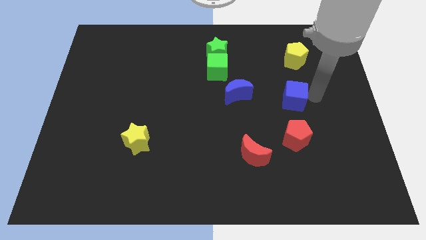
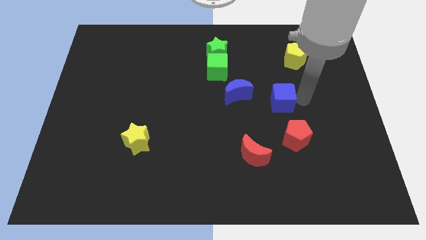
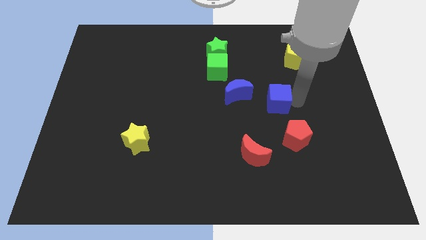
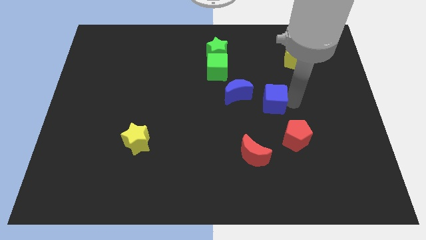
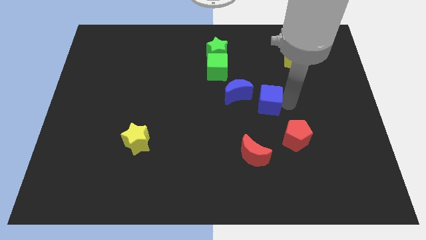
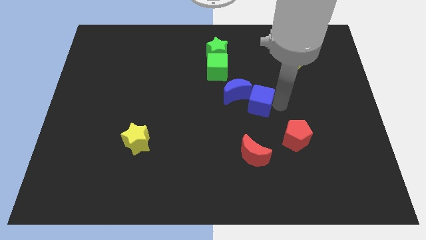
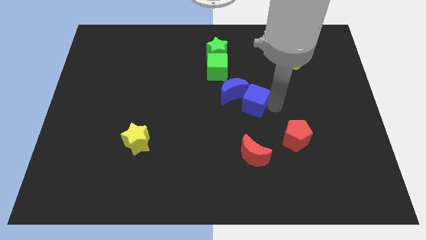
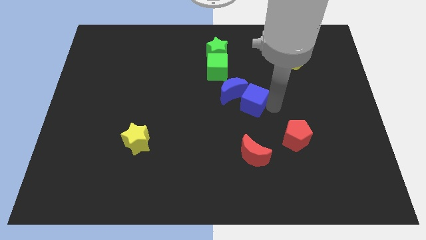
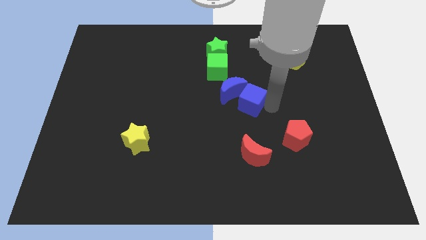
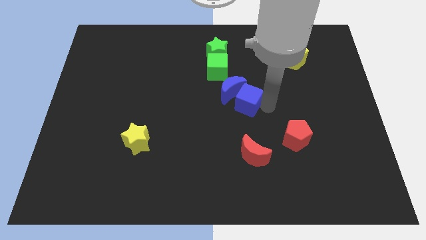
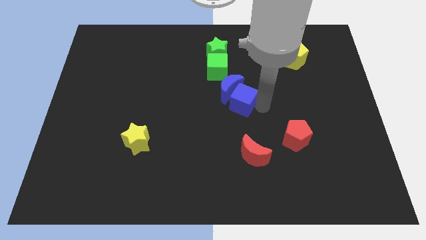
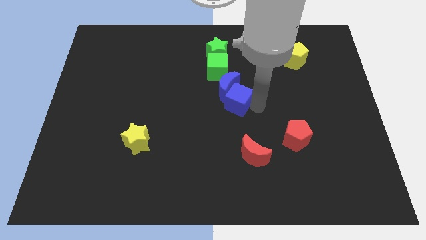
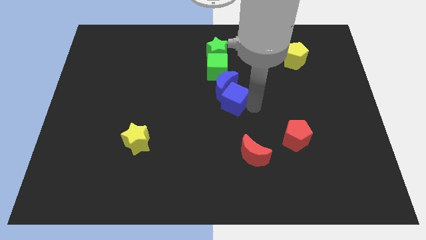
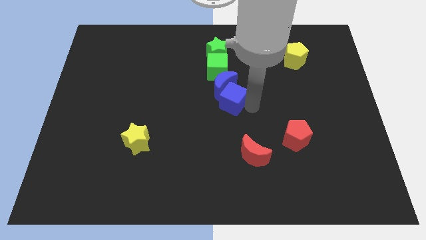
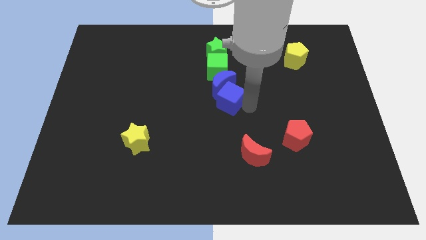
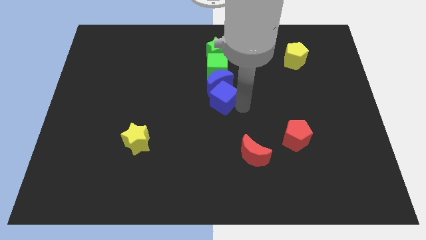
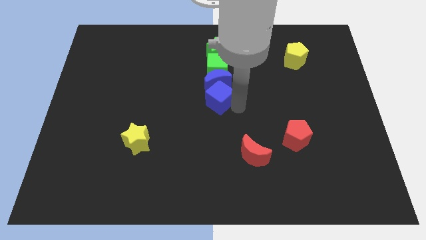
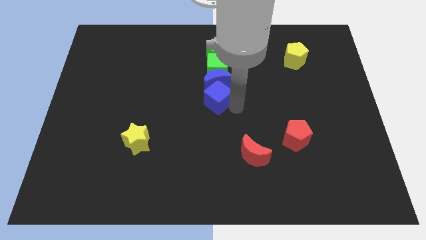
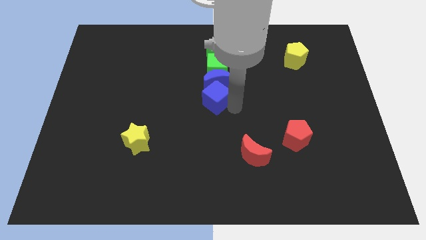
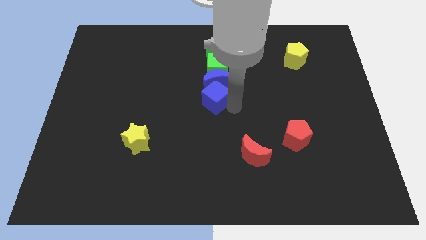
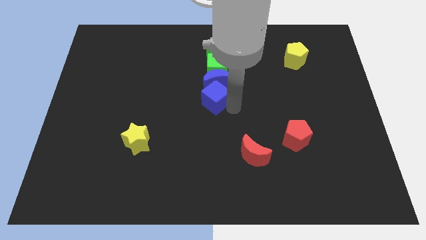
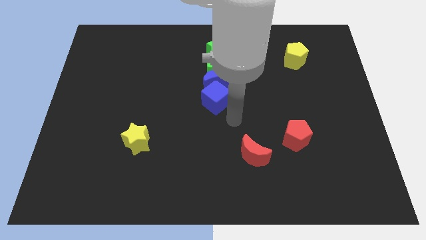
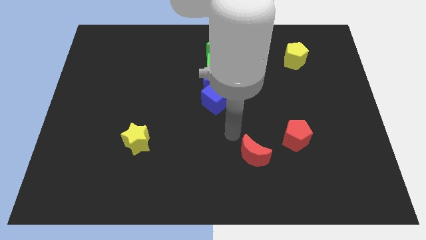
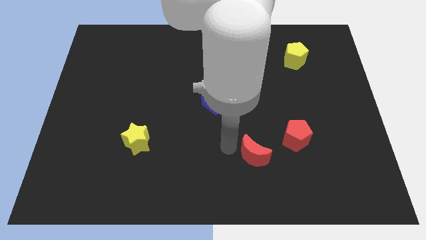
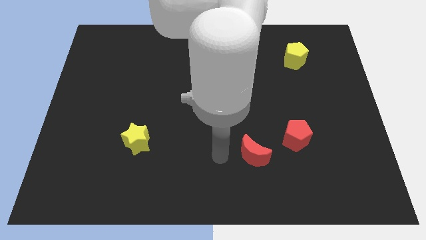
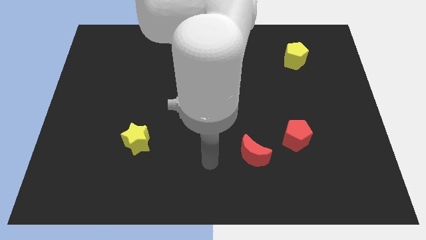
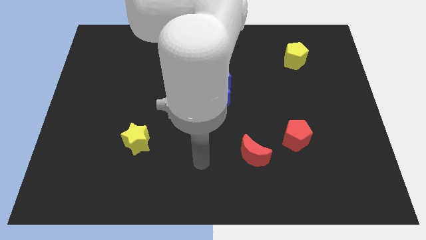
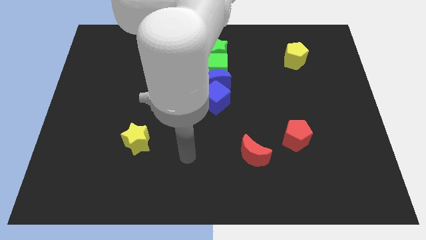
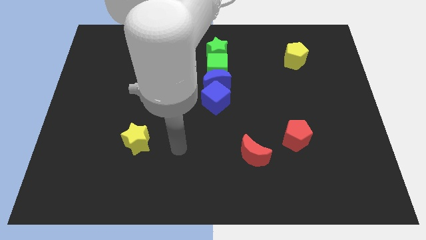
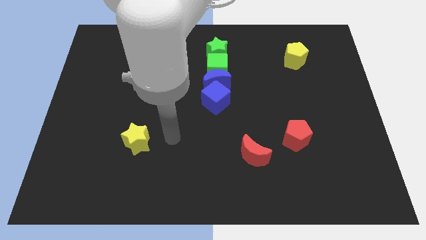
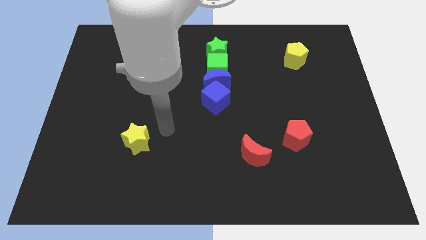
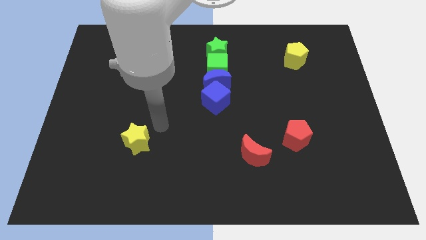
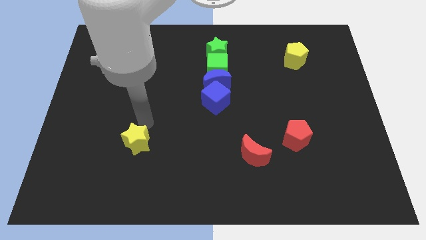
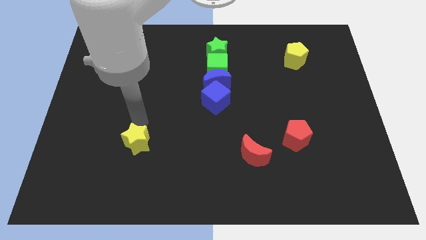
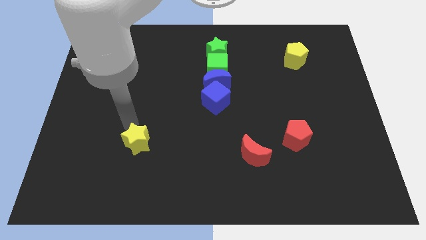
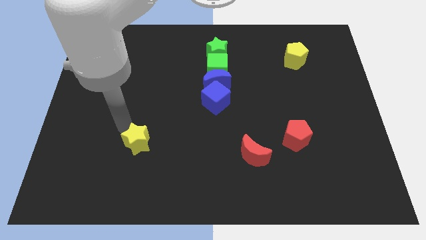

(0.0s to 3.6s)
align the blue crescent along with blue cube below the green cube

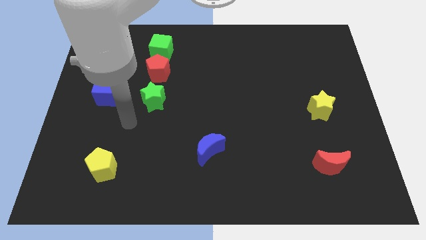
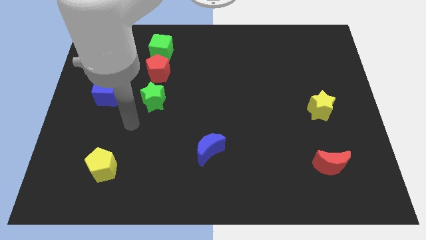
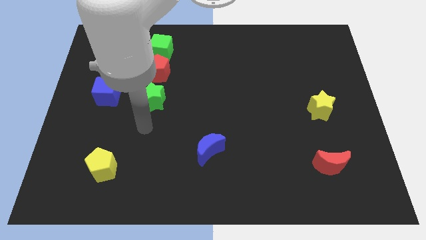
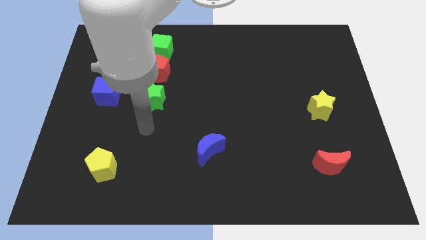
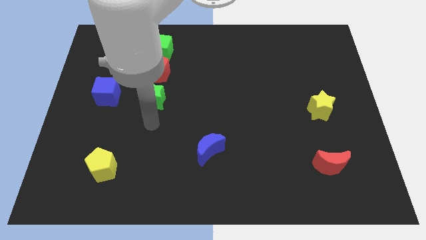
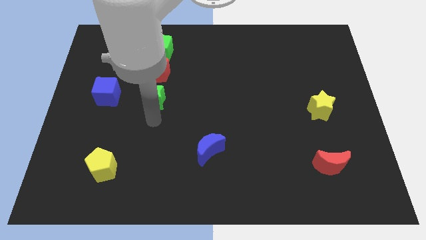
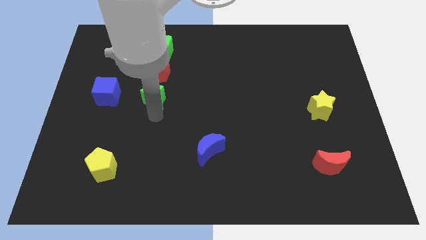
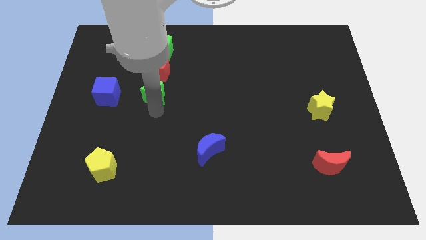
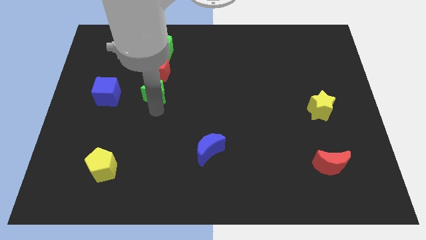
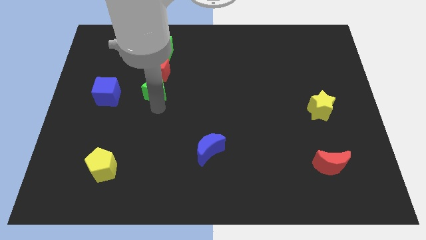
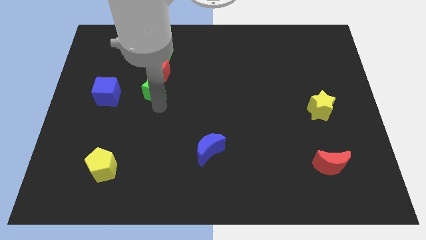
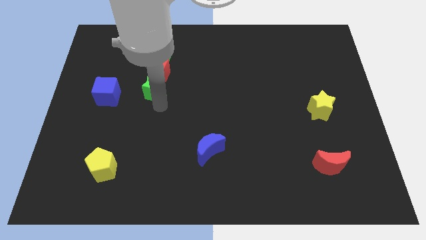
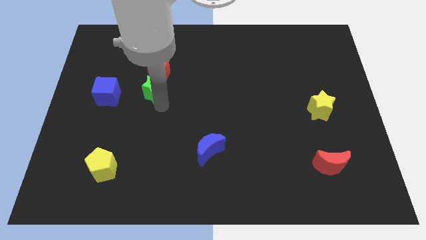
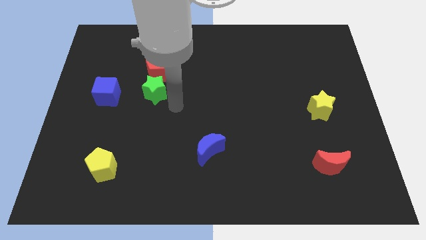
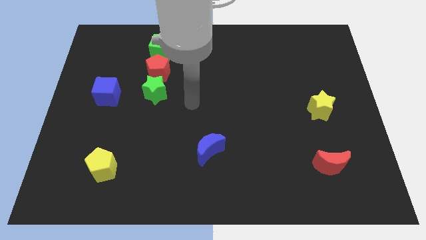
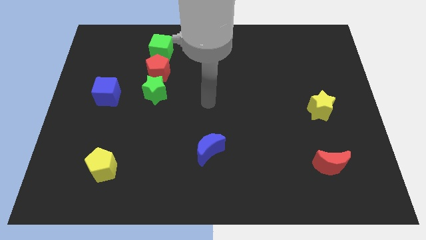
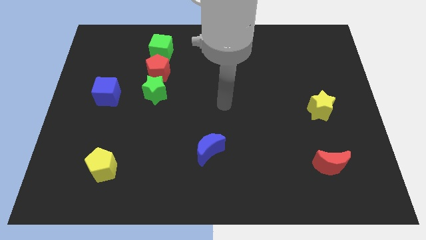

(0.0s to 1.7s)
place green star to the bottom of red pentagon

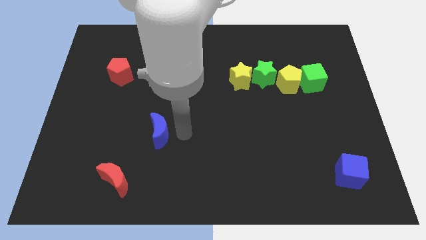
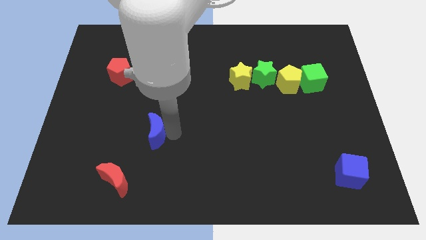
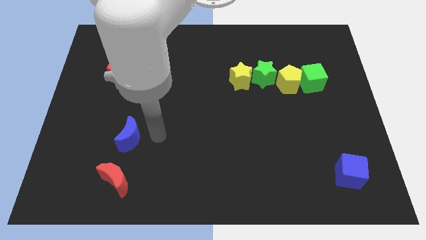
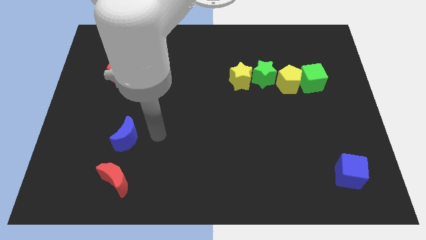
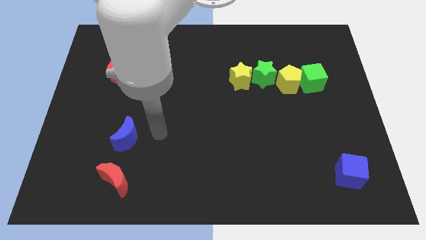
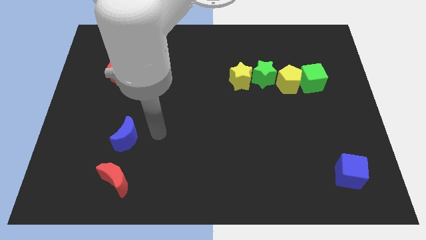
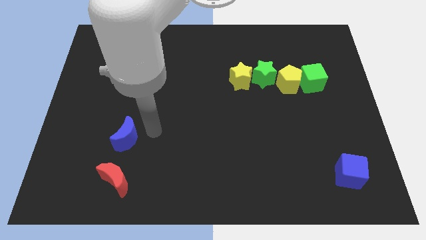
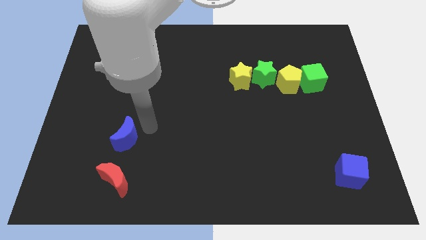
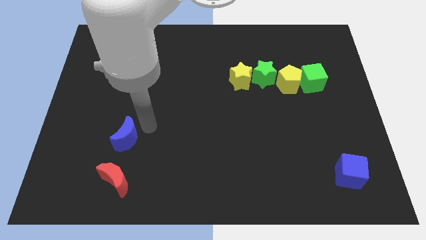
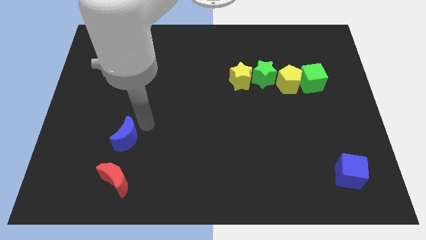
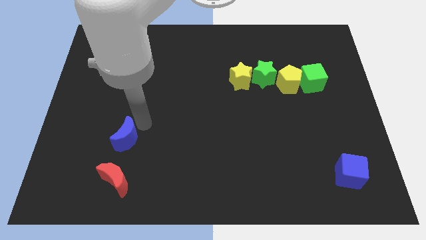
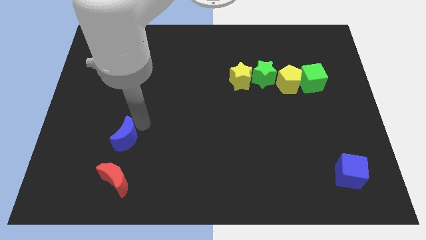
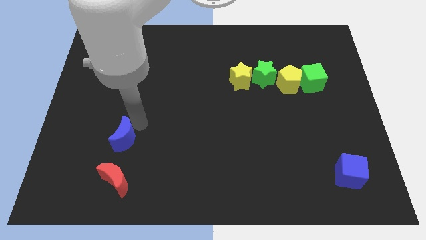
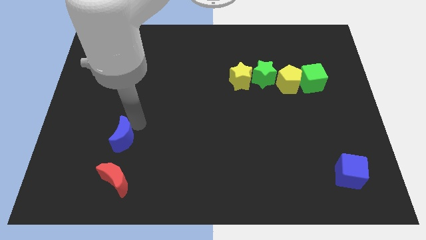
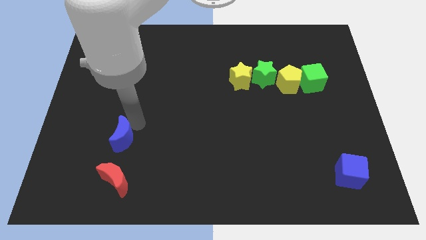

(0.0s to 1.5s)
move the blue crescent to the top of the red crescent

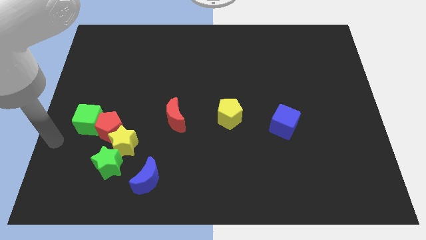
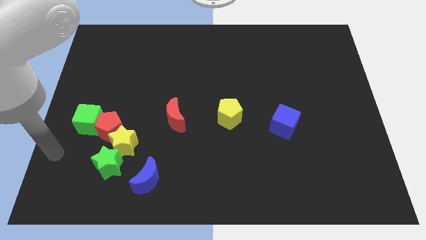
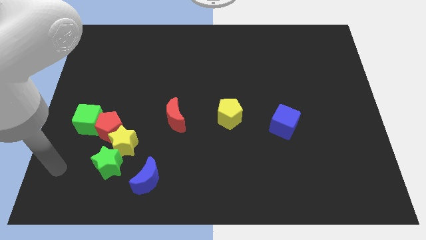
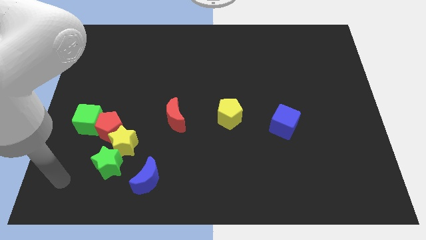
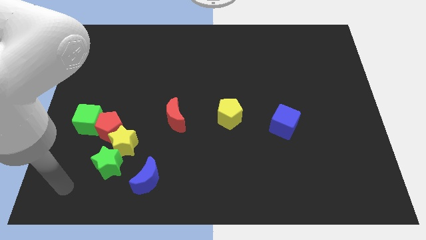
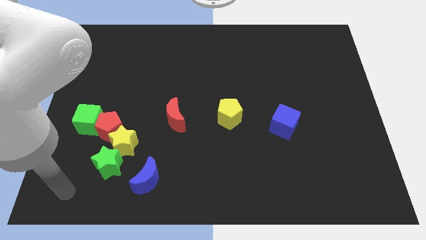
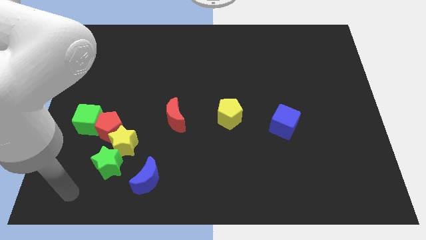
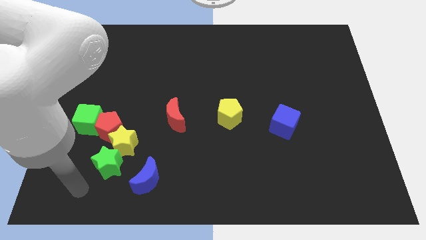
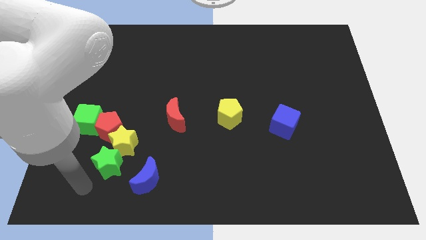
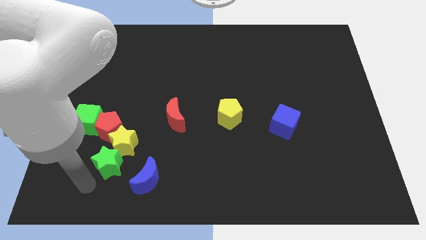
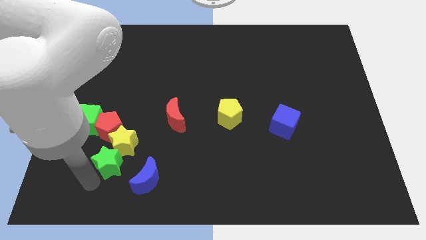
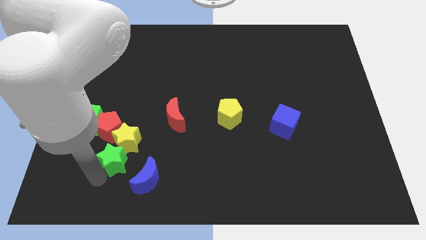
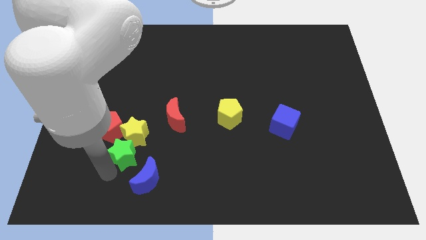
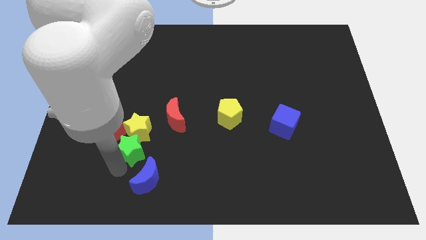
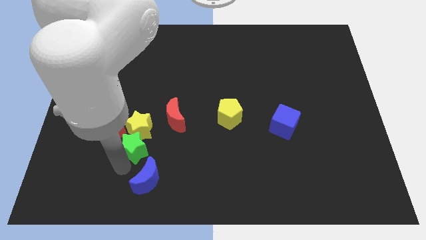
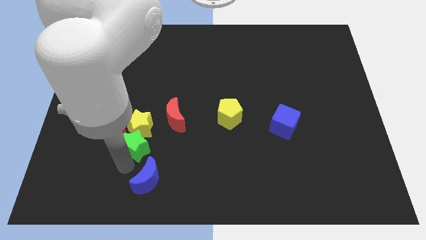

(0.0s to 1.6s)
push the yellow star slightly up with the green star

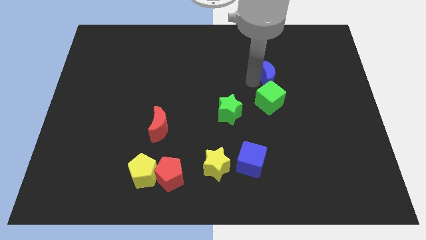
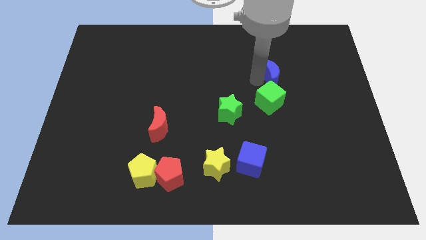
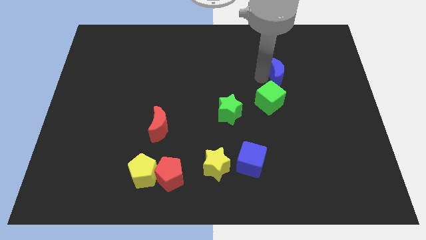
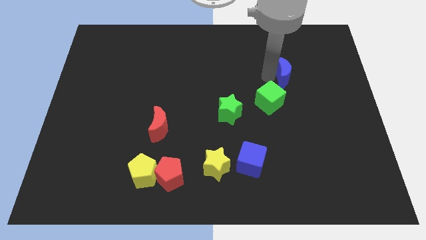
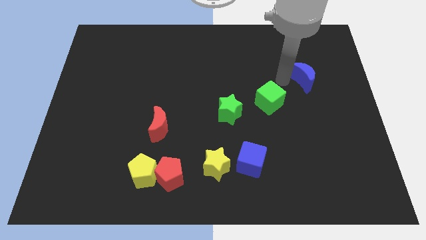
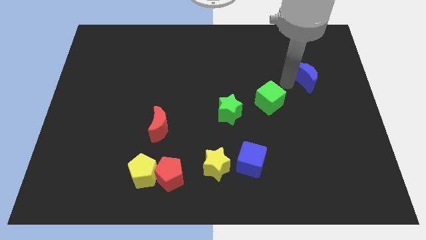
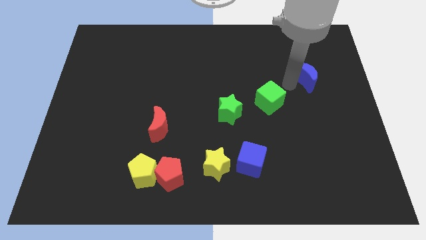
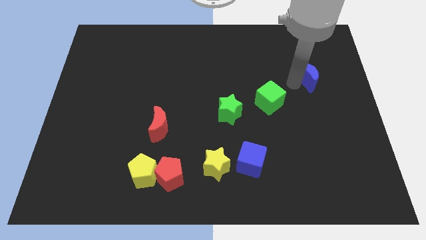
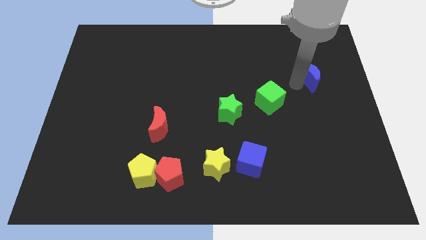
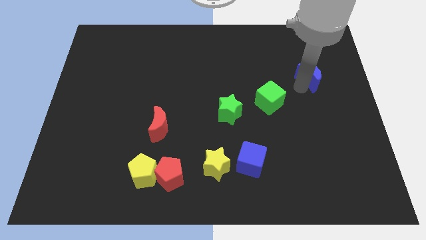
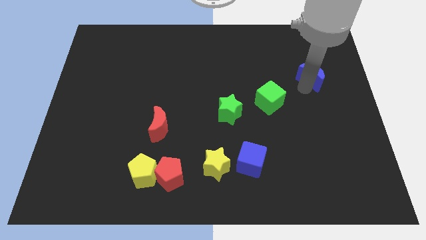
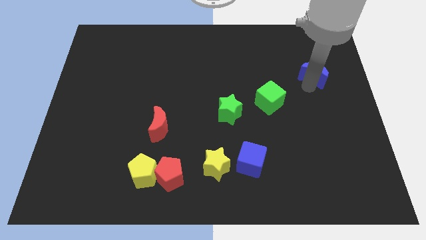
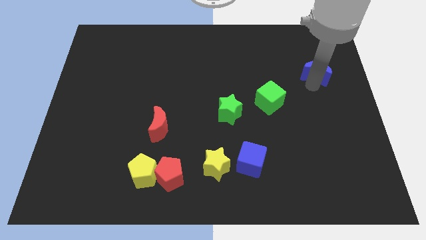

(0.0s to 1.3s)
move the blue moon towards the right side of the board
